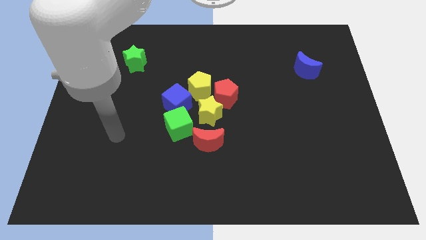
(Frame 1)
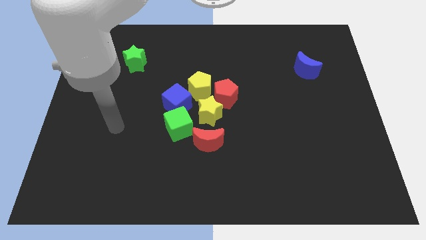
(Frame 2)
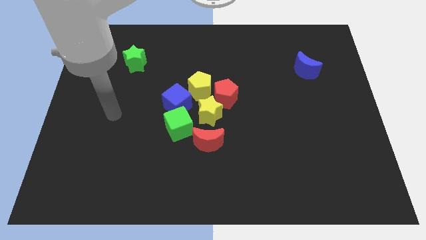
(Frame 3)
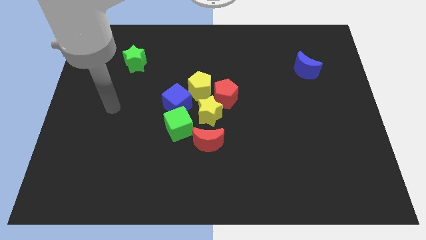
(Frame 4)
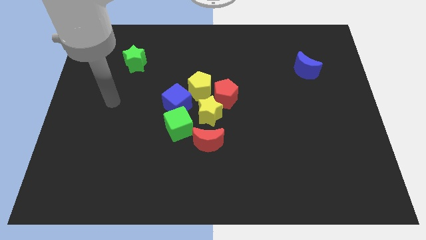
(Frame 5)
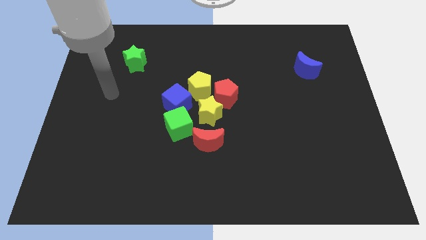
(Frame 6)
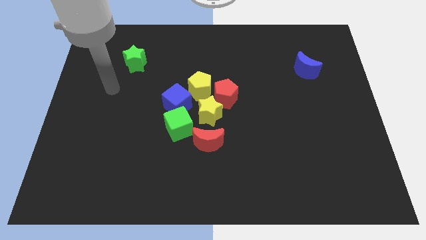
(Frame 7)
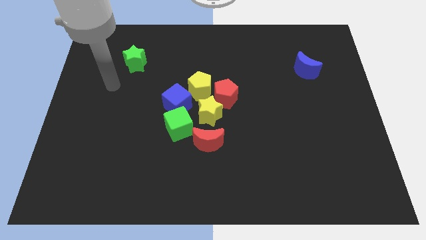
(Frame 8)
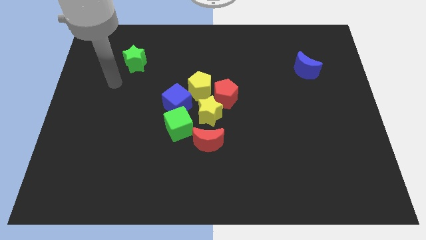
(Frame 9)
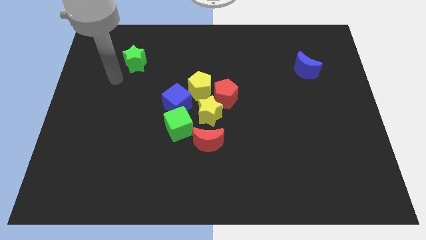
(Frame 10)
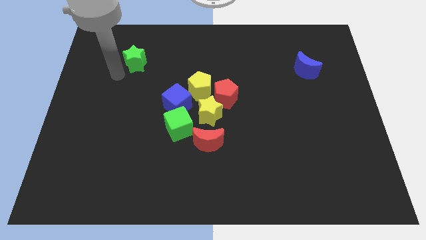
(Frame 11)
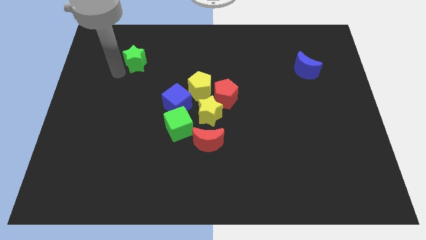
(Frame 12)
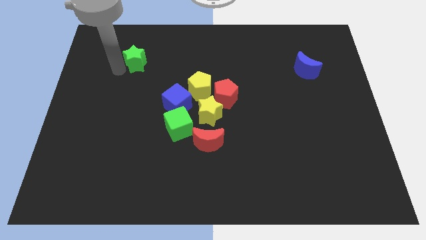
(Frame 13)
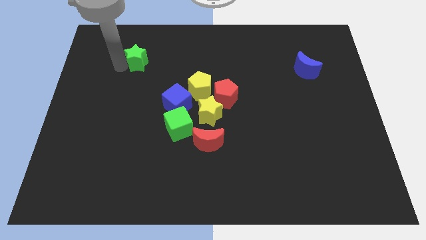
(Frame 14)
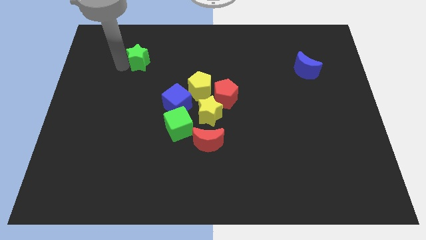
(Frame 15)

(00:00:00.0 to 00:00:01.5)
move your arm towards green star

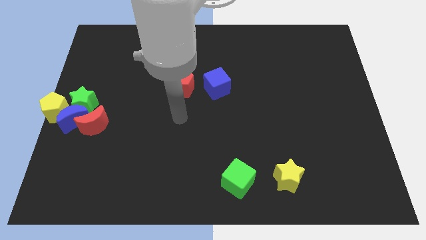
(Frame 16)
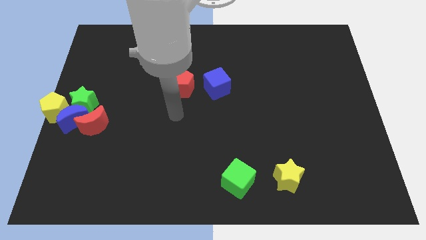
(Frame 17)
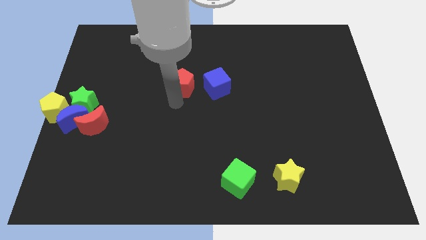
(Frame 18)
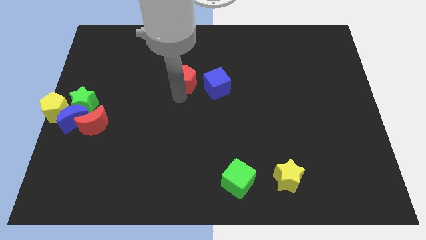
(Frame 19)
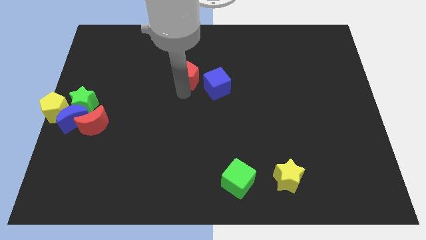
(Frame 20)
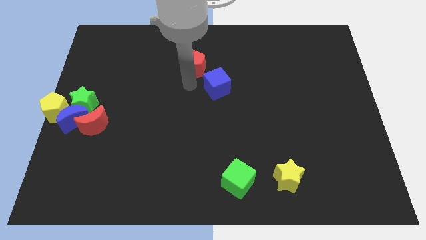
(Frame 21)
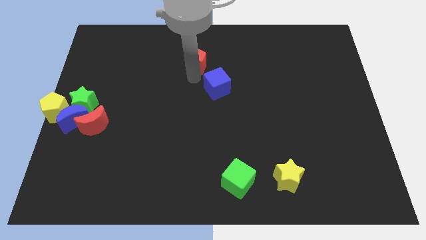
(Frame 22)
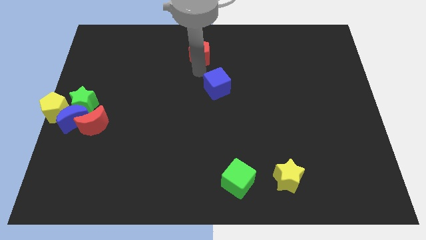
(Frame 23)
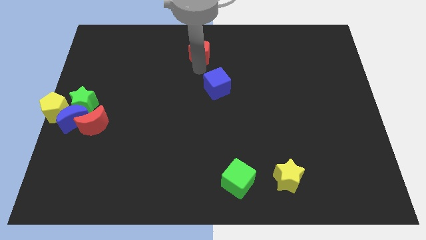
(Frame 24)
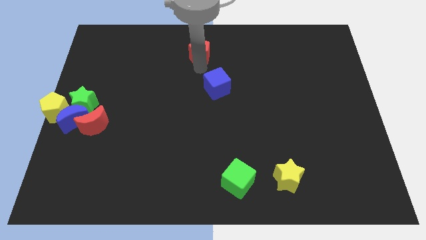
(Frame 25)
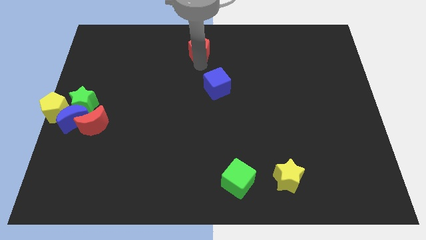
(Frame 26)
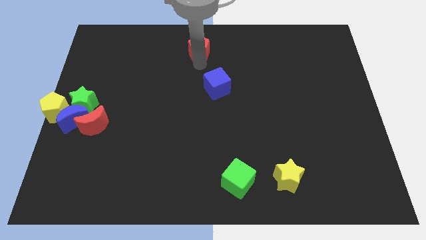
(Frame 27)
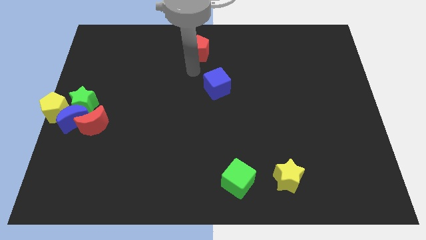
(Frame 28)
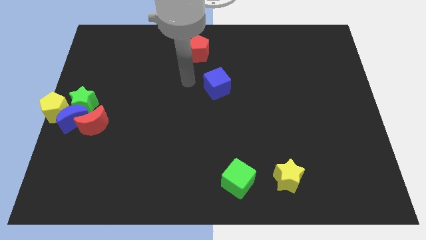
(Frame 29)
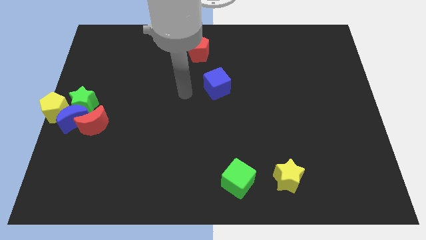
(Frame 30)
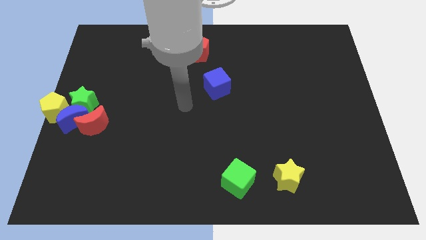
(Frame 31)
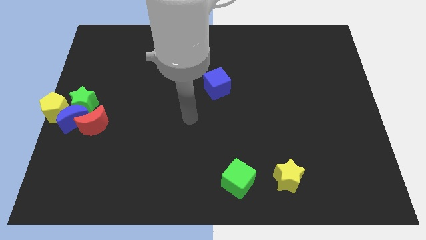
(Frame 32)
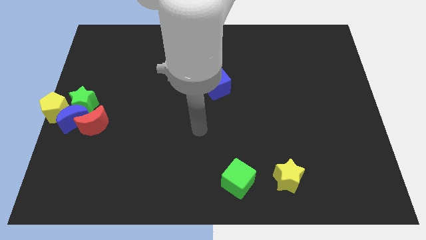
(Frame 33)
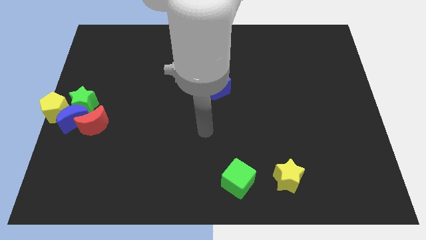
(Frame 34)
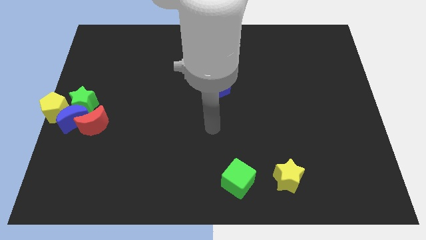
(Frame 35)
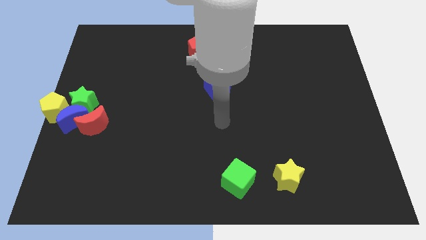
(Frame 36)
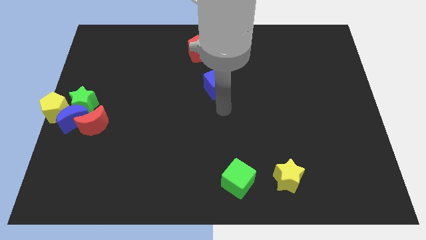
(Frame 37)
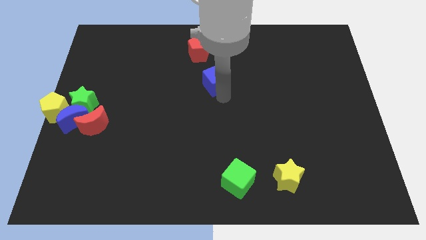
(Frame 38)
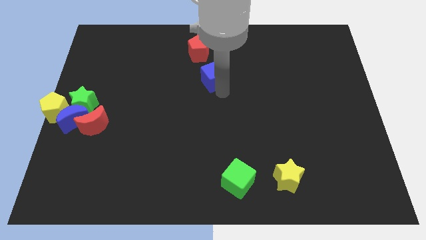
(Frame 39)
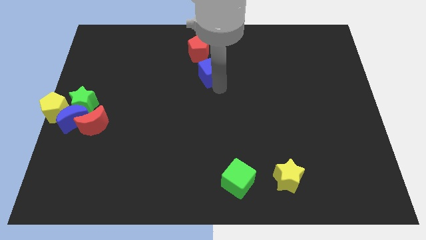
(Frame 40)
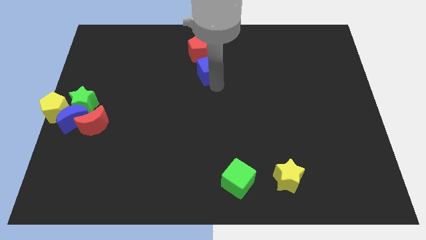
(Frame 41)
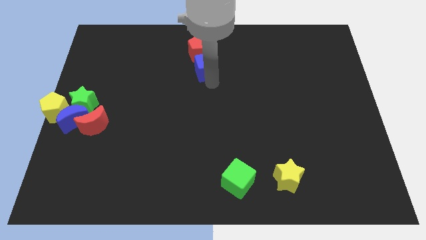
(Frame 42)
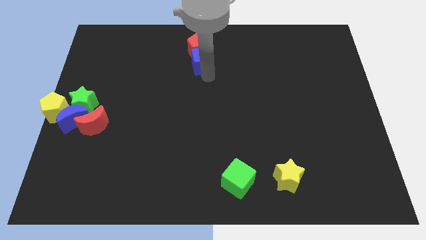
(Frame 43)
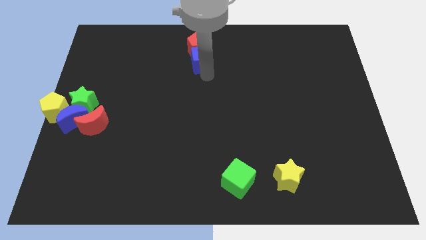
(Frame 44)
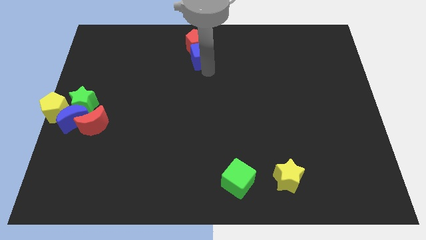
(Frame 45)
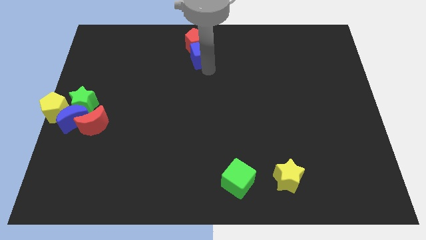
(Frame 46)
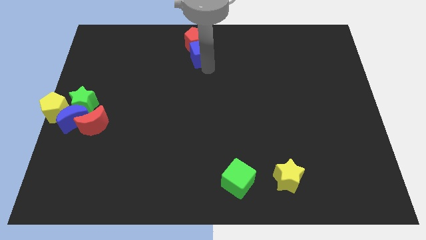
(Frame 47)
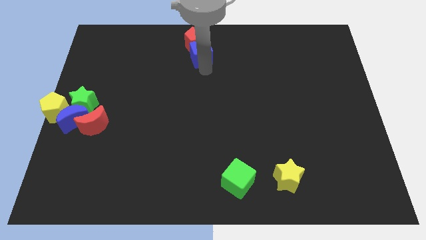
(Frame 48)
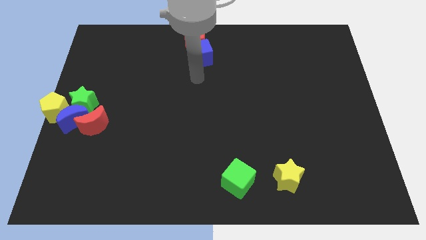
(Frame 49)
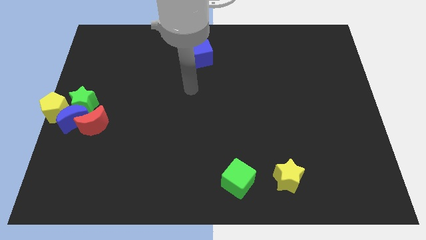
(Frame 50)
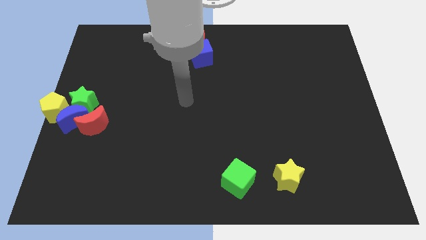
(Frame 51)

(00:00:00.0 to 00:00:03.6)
move red pentagon along with blue cube to the center top

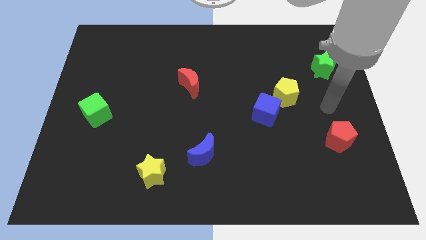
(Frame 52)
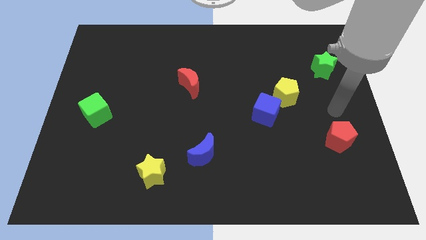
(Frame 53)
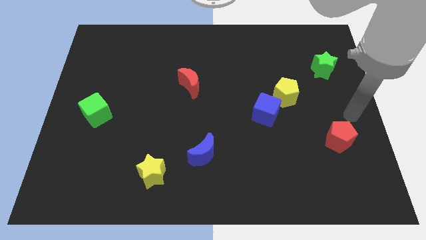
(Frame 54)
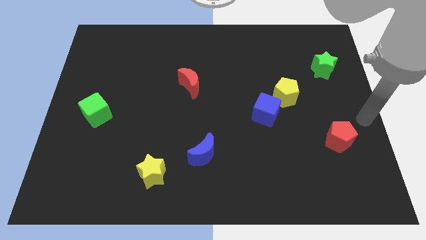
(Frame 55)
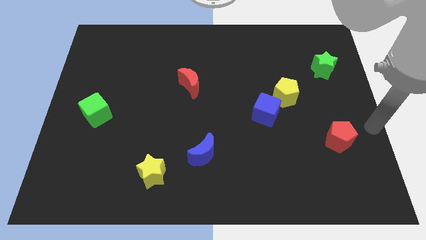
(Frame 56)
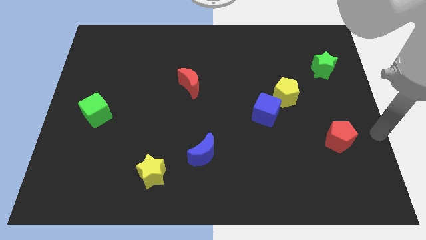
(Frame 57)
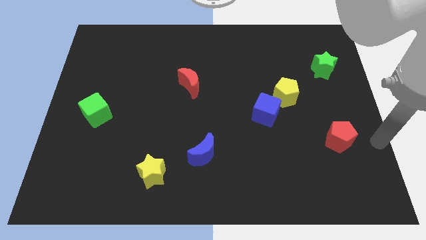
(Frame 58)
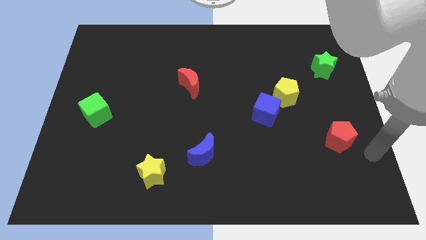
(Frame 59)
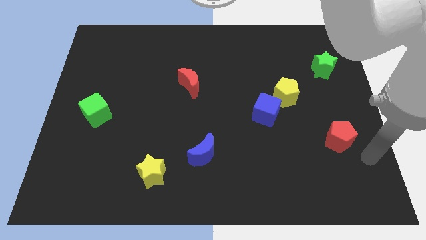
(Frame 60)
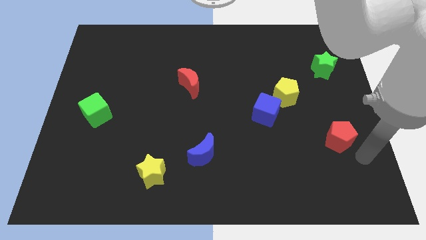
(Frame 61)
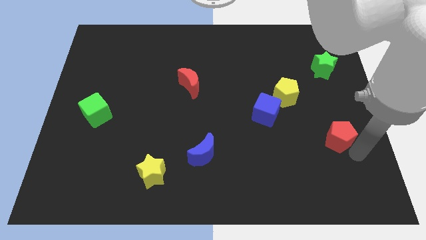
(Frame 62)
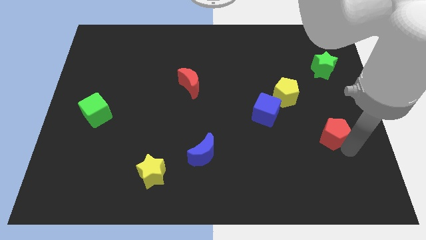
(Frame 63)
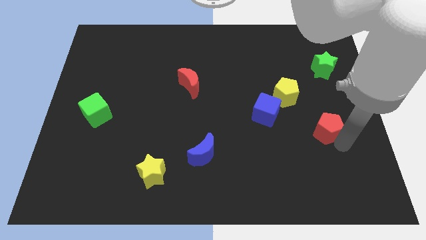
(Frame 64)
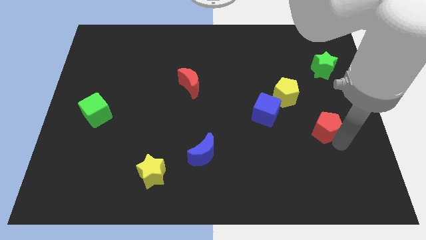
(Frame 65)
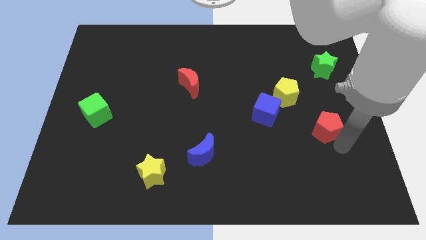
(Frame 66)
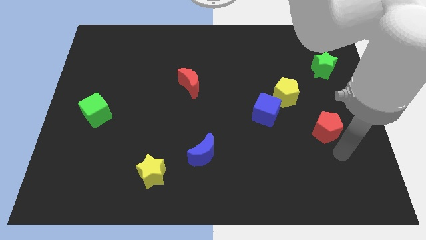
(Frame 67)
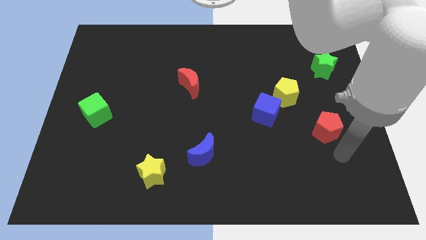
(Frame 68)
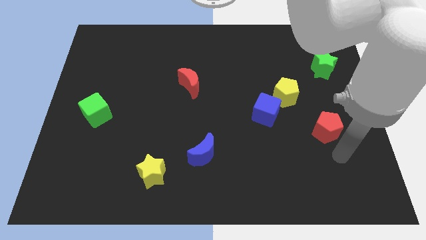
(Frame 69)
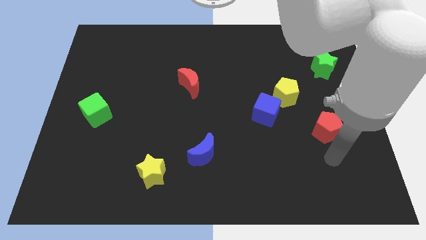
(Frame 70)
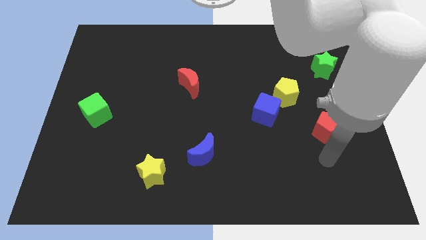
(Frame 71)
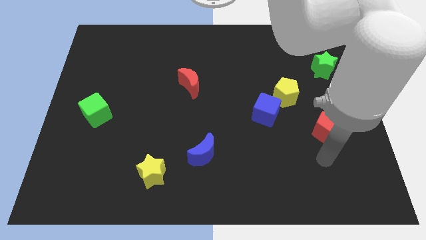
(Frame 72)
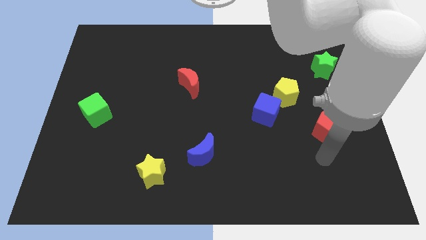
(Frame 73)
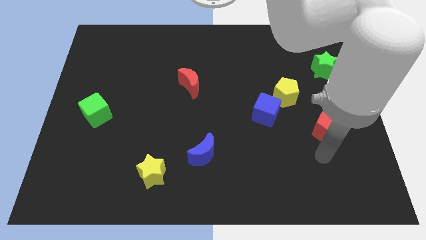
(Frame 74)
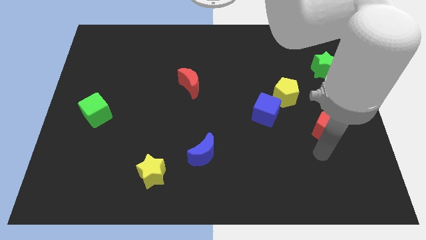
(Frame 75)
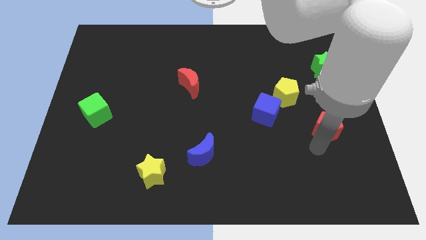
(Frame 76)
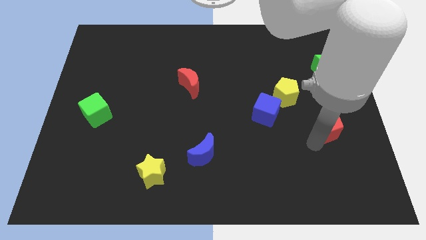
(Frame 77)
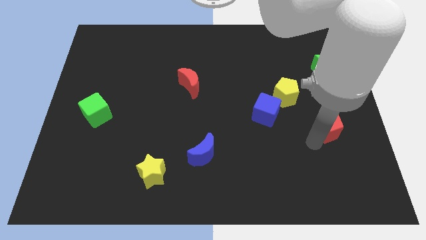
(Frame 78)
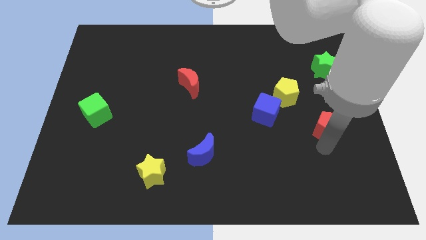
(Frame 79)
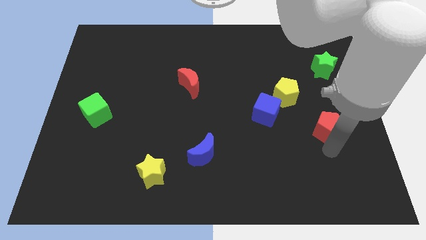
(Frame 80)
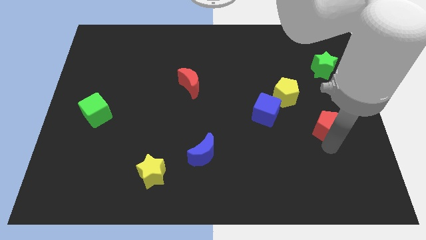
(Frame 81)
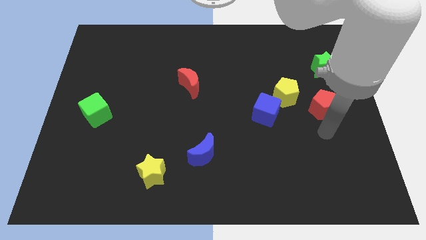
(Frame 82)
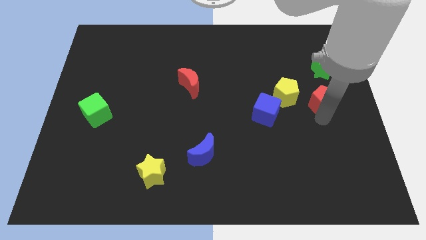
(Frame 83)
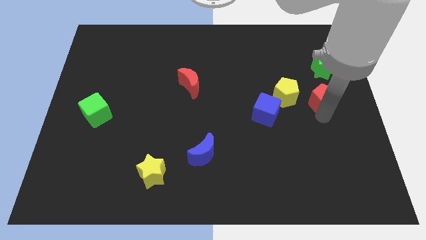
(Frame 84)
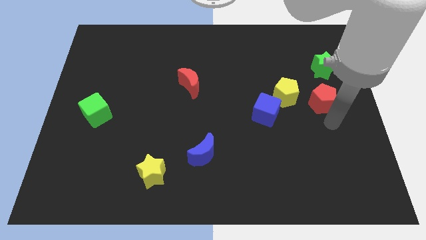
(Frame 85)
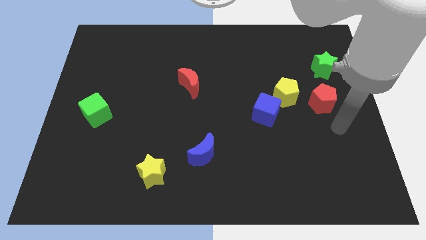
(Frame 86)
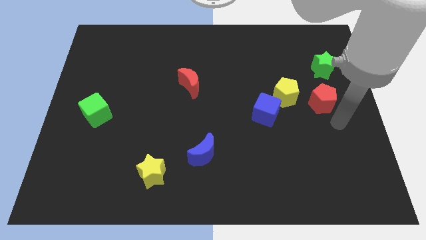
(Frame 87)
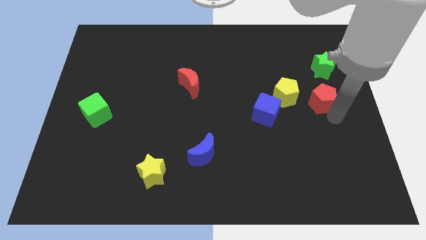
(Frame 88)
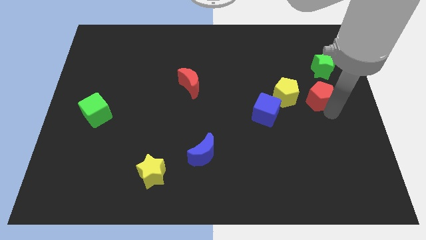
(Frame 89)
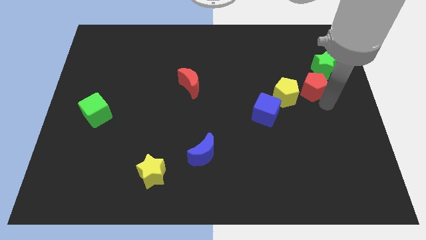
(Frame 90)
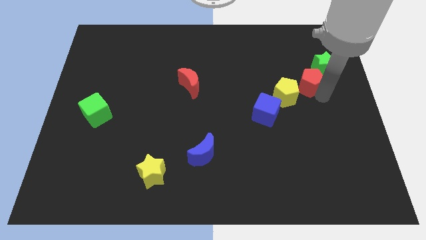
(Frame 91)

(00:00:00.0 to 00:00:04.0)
place the red pentagon in between the yellow pentagon and the green star
